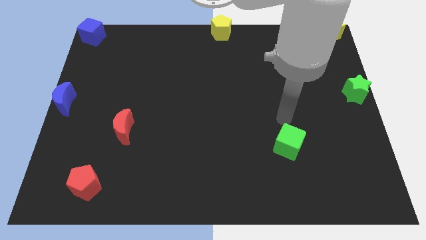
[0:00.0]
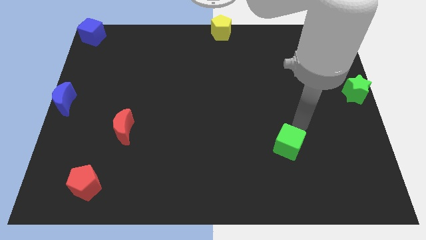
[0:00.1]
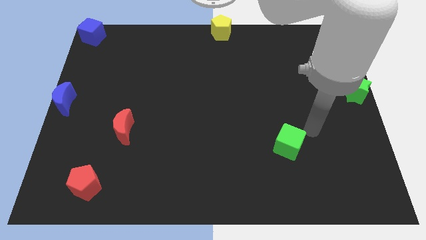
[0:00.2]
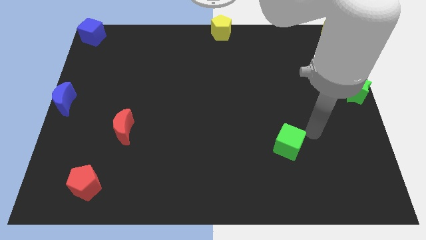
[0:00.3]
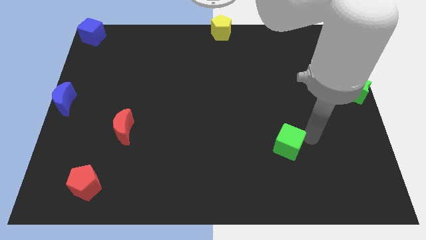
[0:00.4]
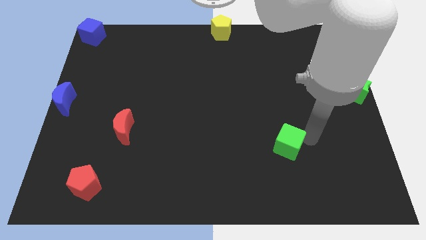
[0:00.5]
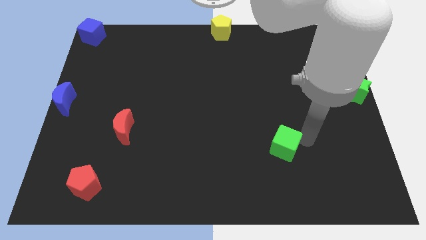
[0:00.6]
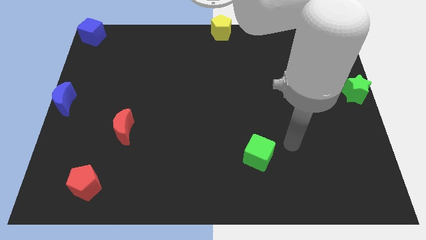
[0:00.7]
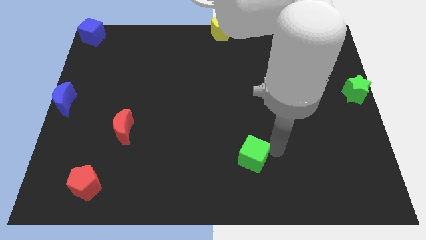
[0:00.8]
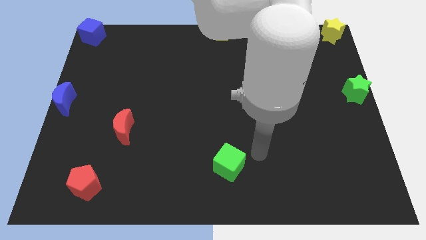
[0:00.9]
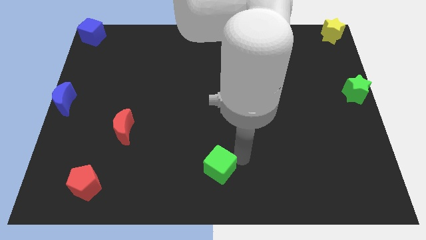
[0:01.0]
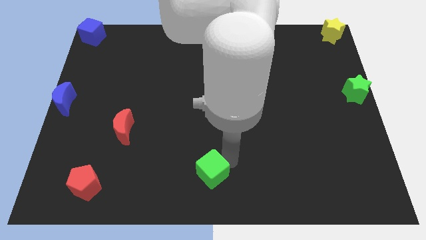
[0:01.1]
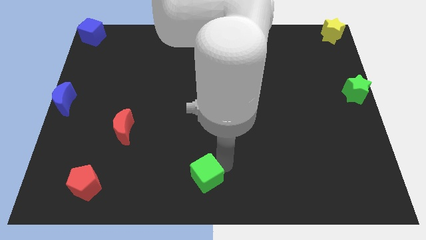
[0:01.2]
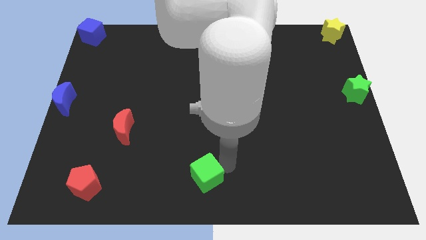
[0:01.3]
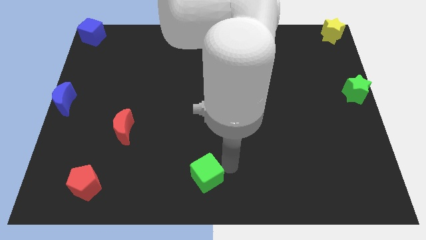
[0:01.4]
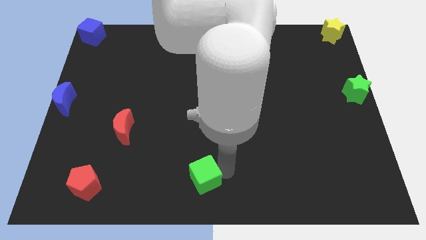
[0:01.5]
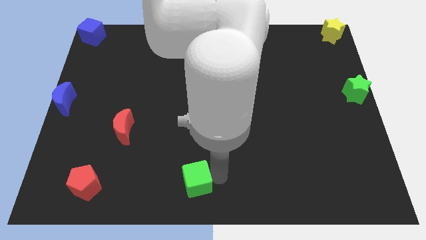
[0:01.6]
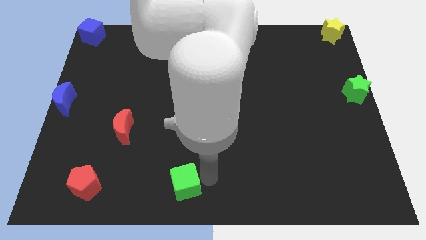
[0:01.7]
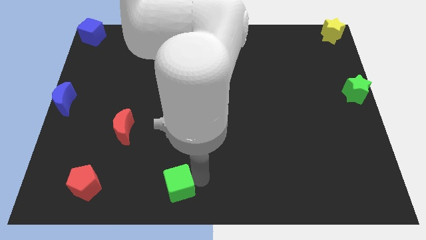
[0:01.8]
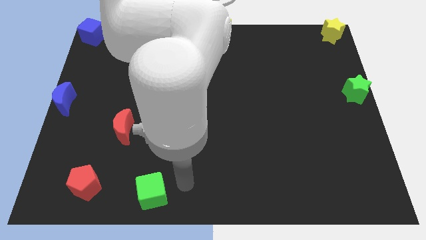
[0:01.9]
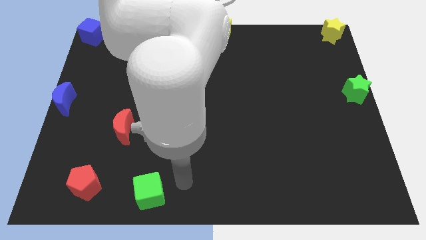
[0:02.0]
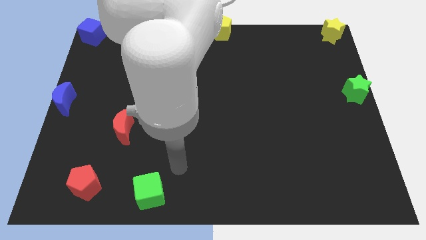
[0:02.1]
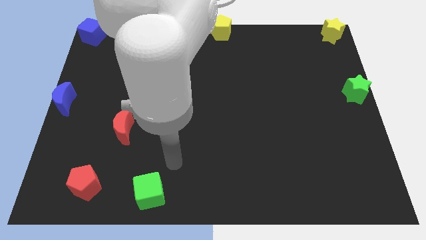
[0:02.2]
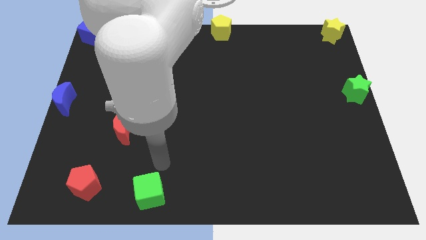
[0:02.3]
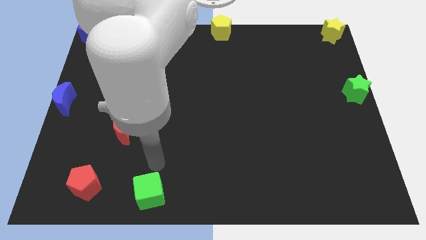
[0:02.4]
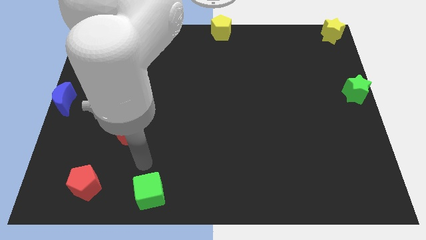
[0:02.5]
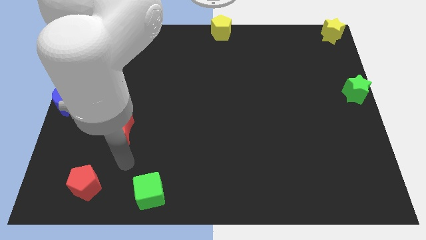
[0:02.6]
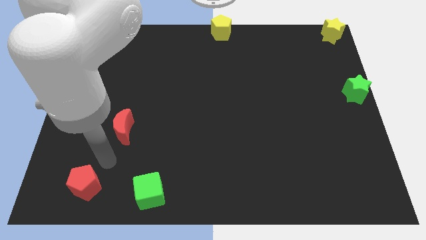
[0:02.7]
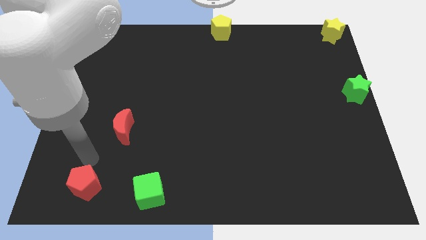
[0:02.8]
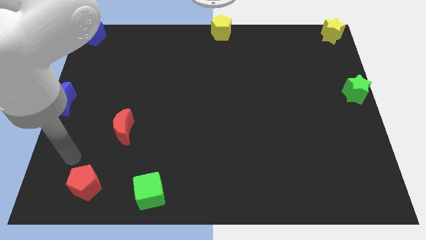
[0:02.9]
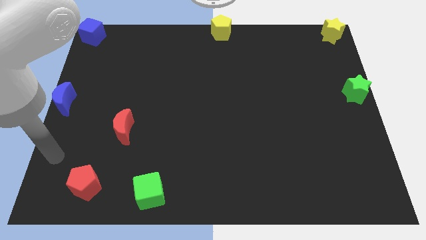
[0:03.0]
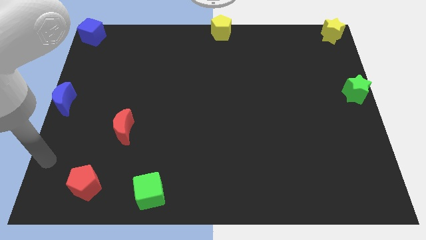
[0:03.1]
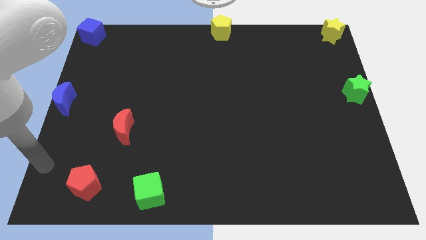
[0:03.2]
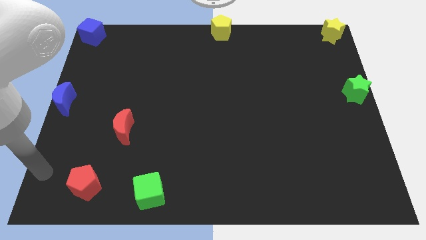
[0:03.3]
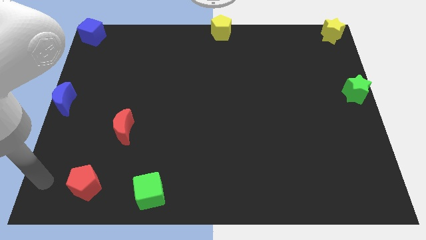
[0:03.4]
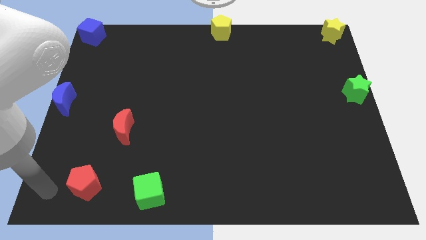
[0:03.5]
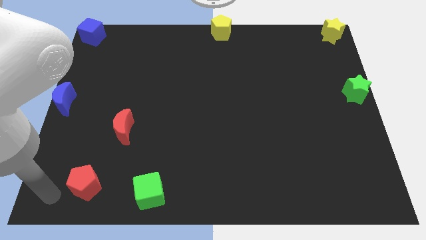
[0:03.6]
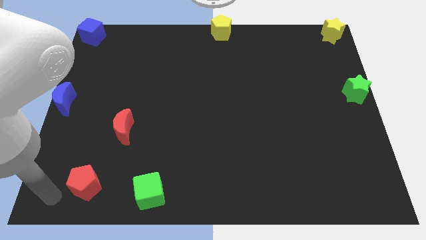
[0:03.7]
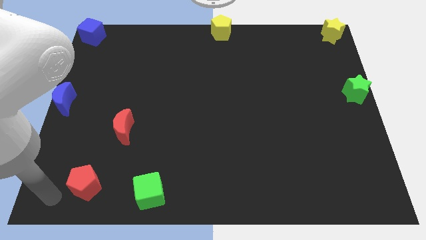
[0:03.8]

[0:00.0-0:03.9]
place the green cube horizontally to the right side of the red pentagon

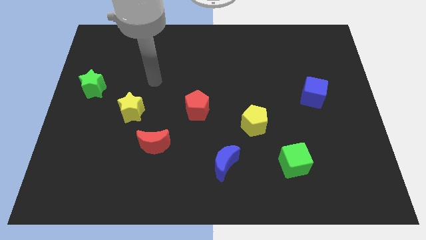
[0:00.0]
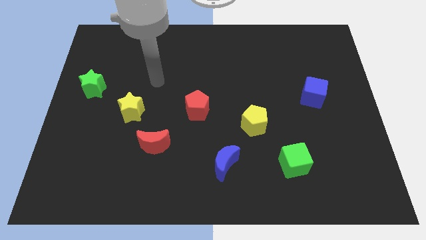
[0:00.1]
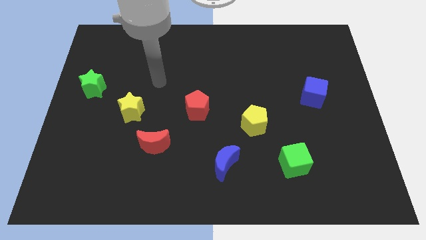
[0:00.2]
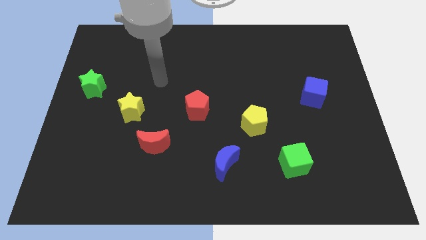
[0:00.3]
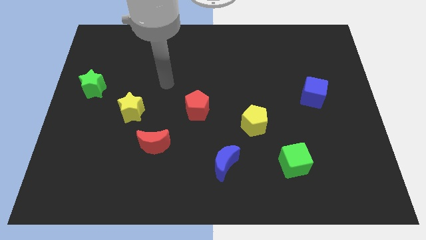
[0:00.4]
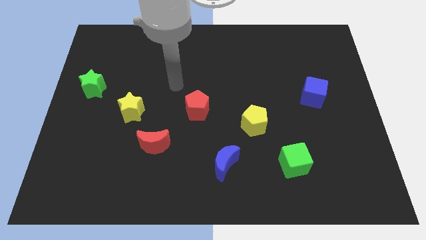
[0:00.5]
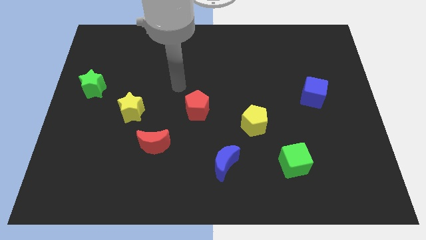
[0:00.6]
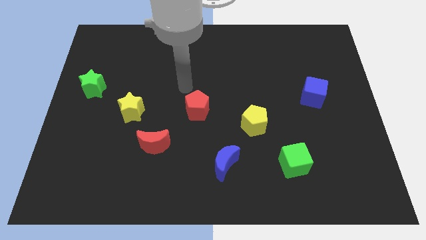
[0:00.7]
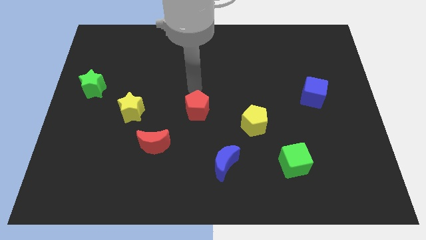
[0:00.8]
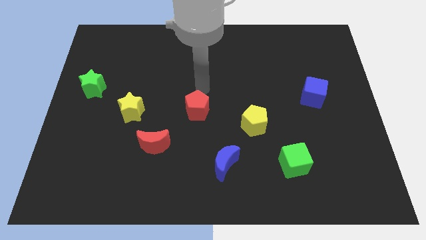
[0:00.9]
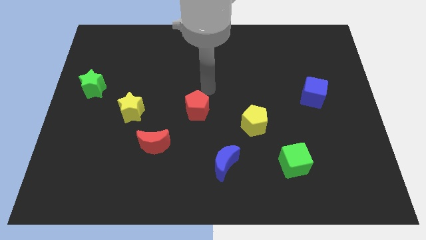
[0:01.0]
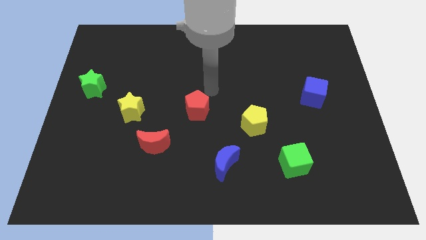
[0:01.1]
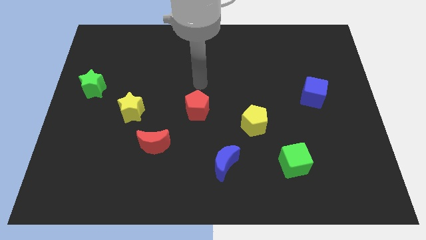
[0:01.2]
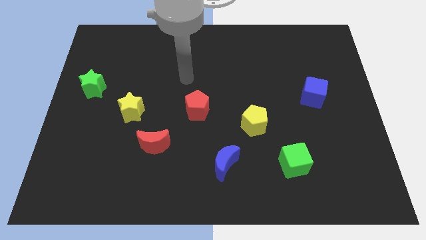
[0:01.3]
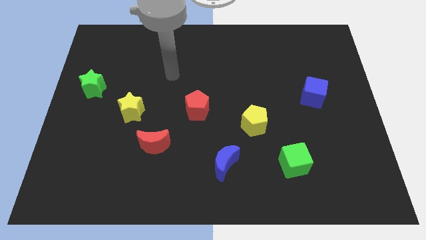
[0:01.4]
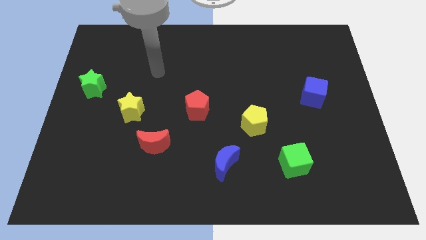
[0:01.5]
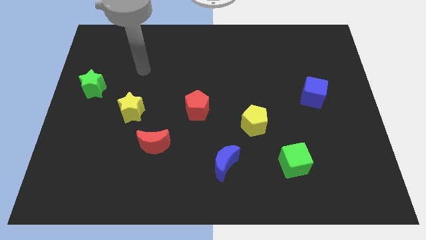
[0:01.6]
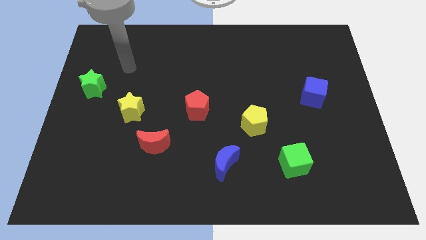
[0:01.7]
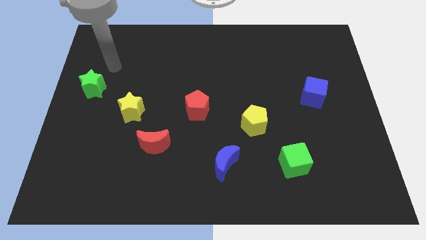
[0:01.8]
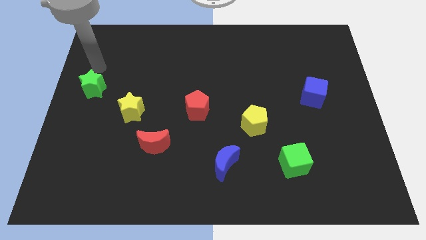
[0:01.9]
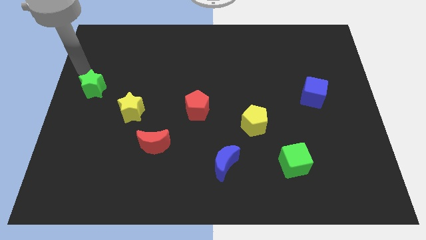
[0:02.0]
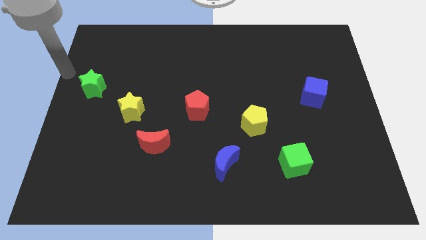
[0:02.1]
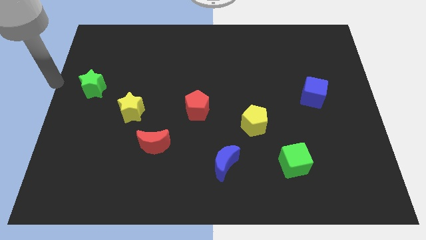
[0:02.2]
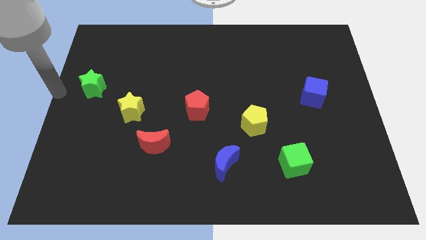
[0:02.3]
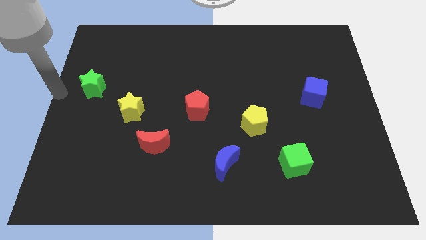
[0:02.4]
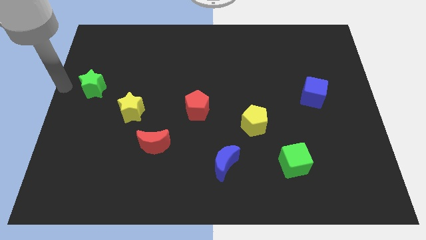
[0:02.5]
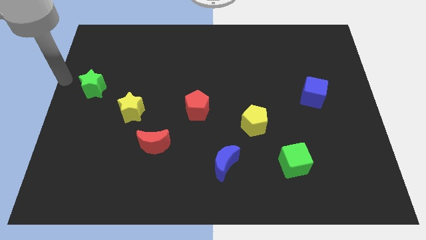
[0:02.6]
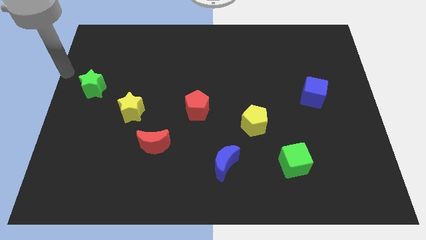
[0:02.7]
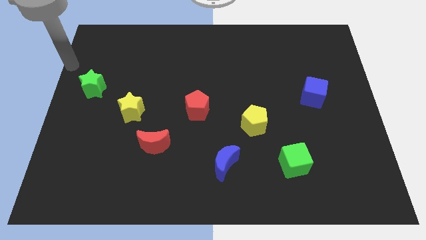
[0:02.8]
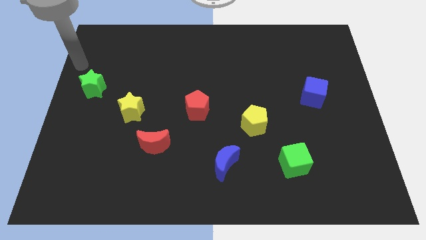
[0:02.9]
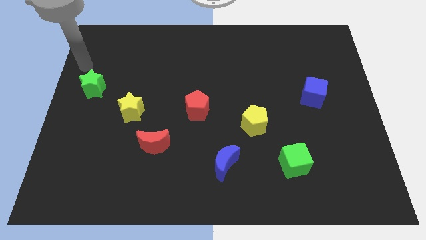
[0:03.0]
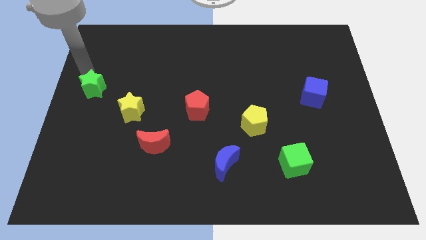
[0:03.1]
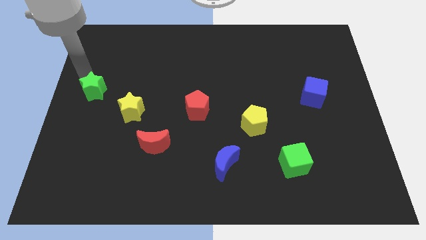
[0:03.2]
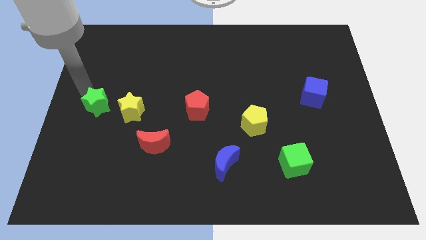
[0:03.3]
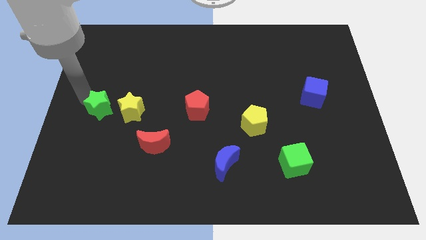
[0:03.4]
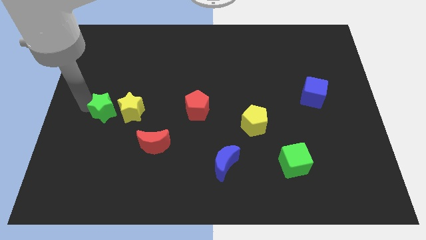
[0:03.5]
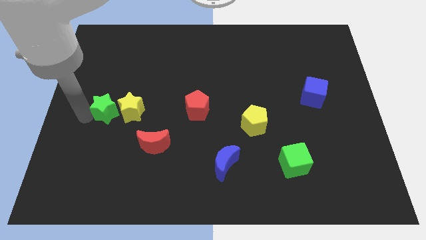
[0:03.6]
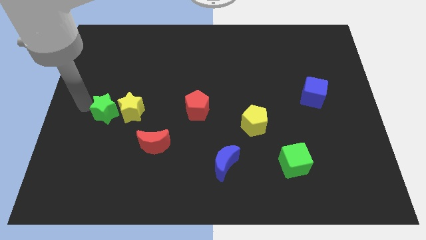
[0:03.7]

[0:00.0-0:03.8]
move the green star close to the left side of the yellow star

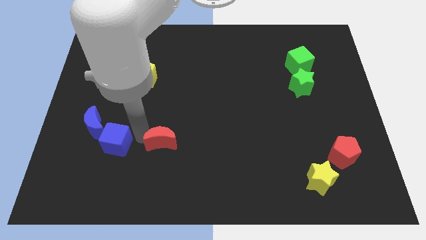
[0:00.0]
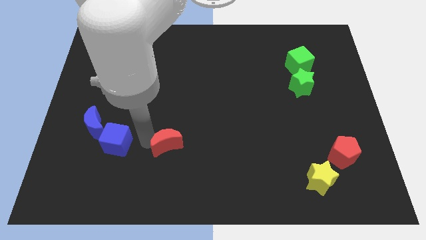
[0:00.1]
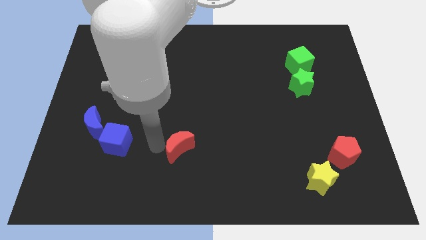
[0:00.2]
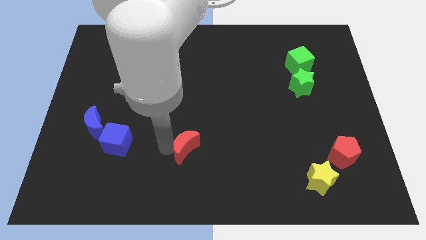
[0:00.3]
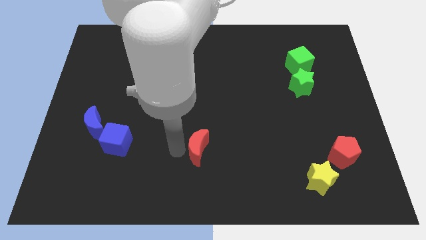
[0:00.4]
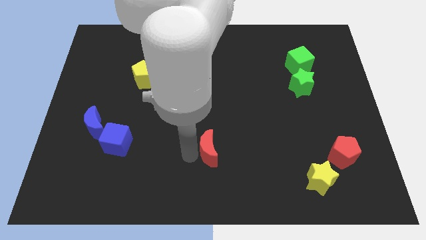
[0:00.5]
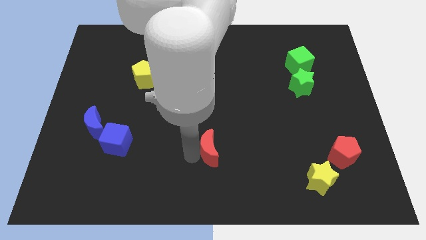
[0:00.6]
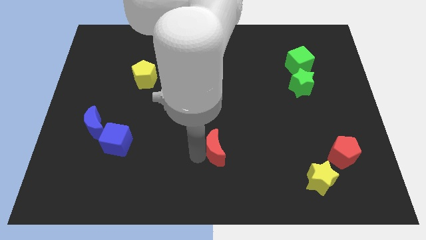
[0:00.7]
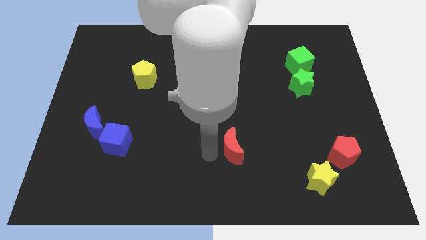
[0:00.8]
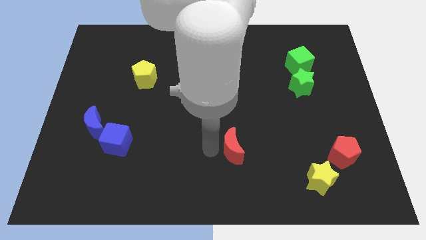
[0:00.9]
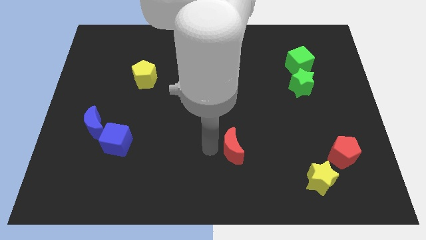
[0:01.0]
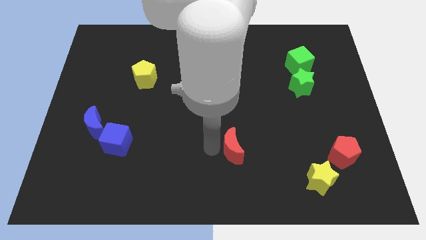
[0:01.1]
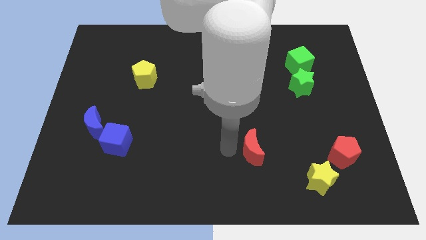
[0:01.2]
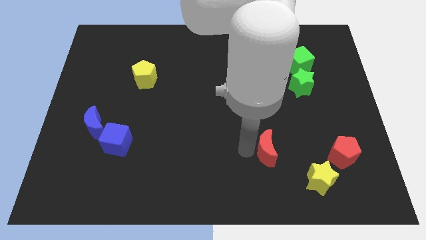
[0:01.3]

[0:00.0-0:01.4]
move the red crescent parallel to the left of the red pentagon
